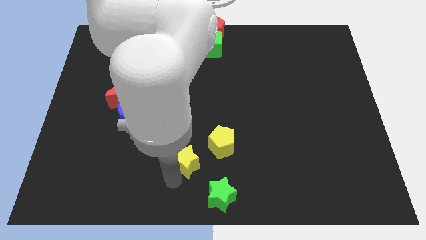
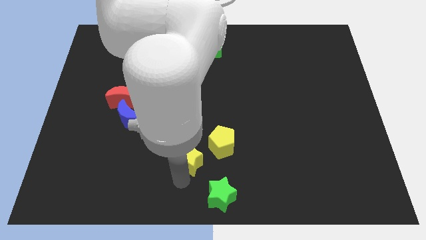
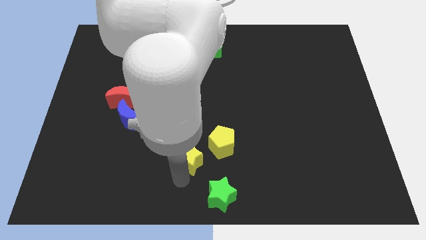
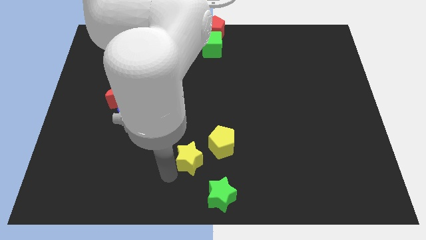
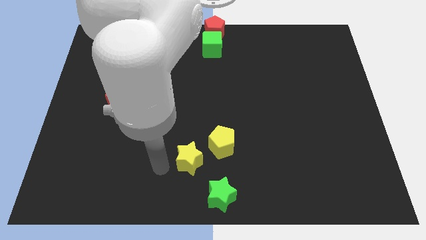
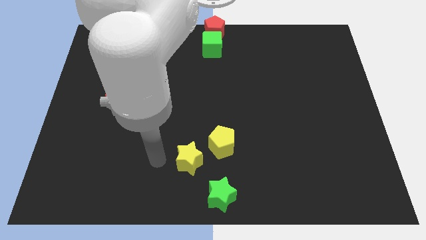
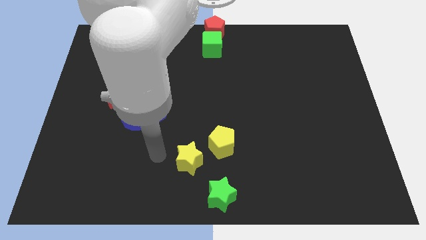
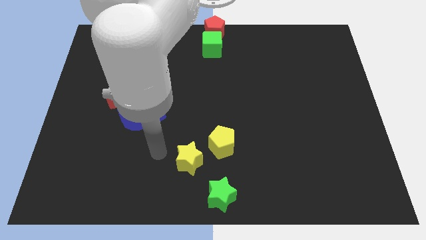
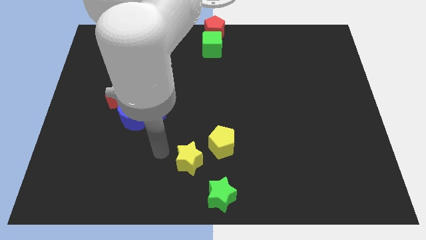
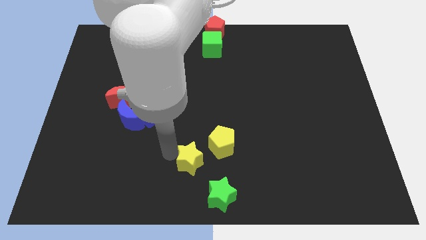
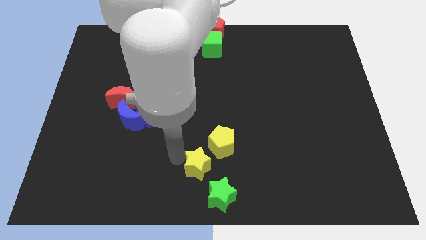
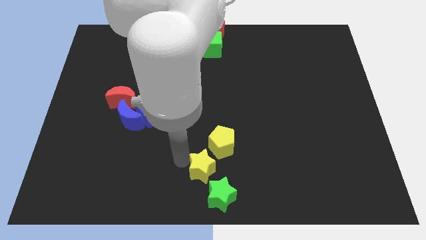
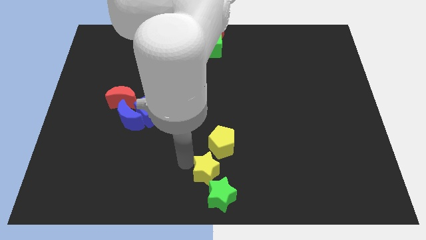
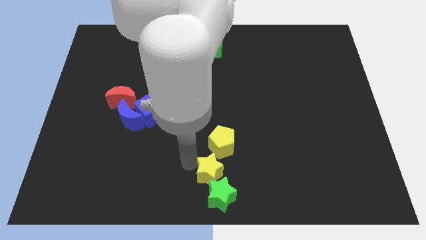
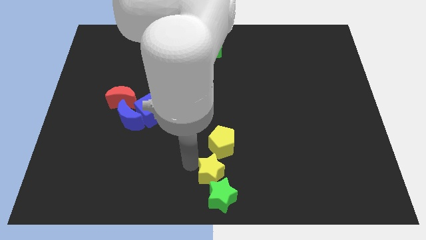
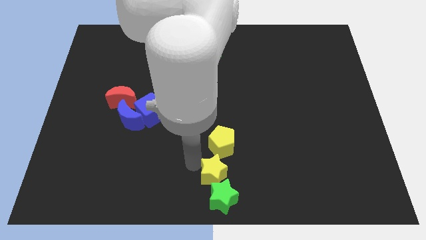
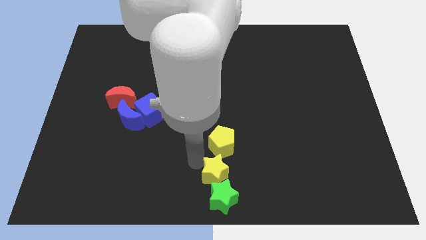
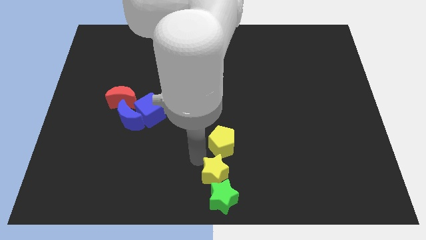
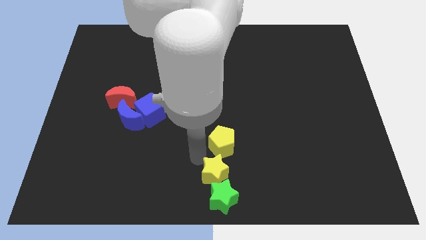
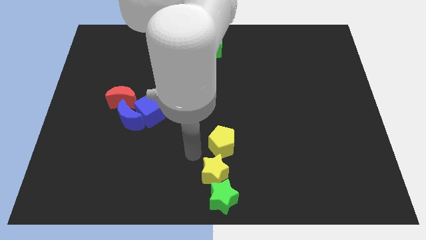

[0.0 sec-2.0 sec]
push the yellow star into the green star

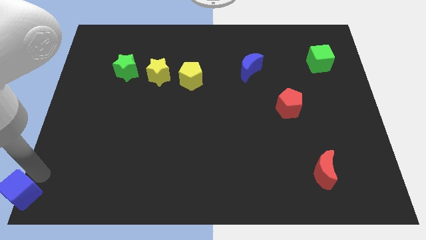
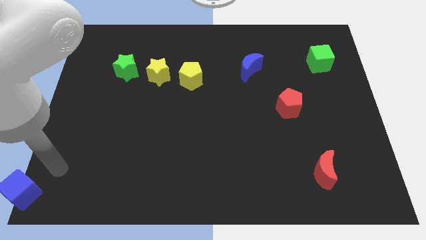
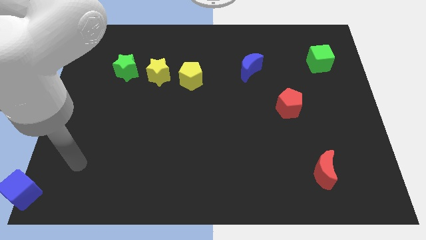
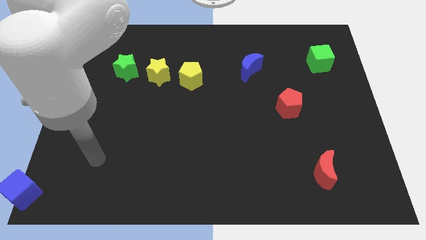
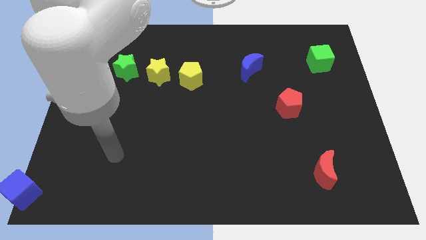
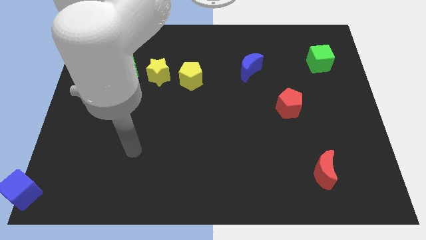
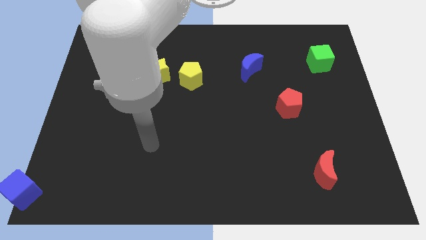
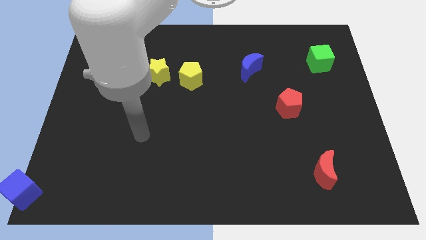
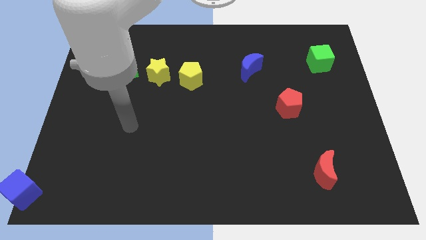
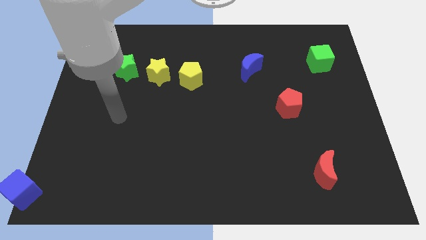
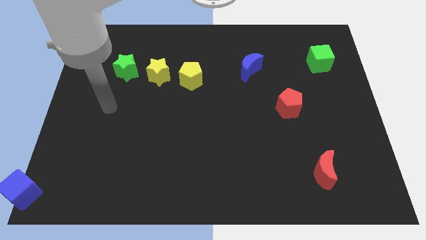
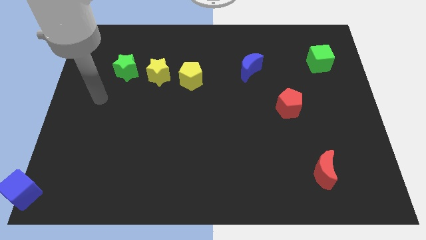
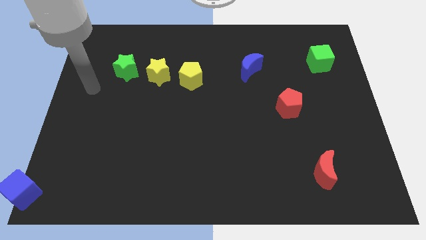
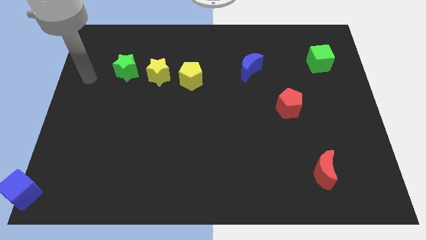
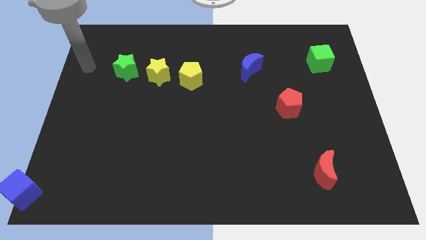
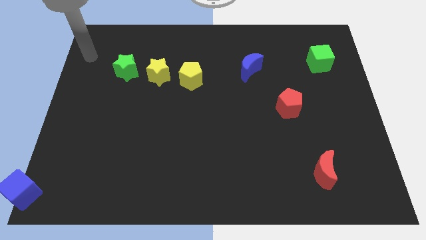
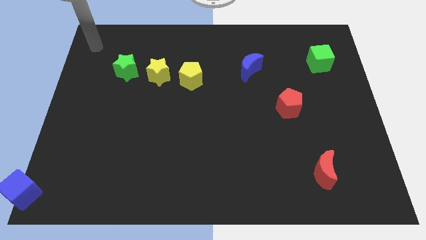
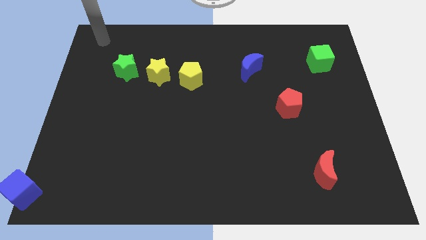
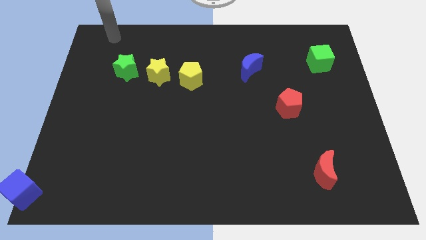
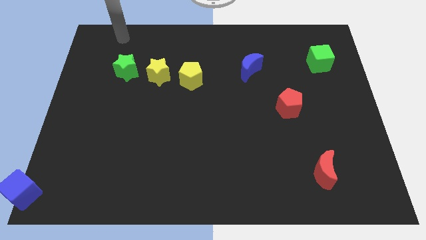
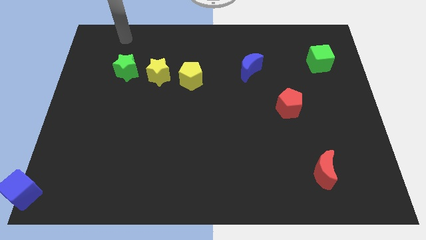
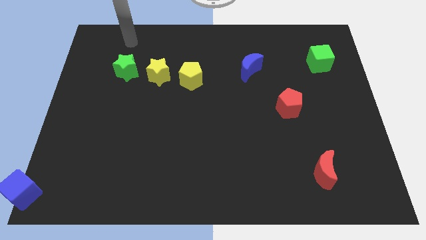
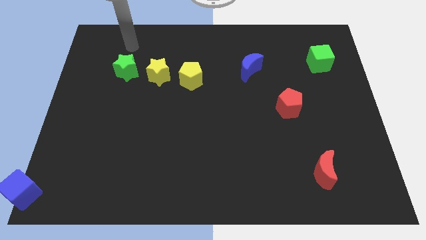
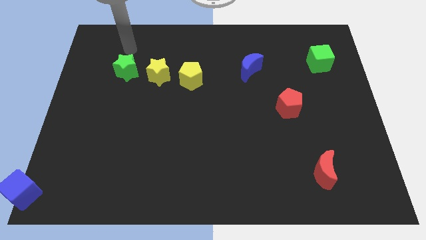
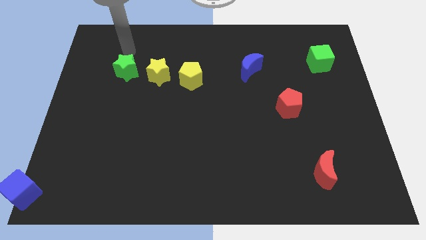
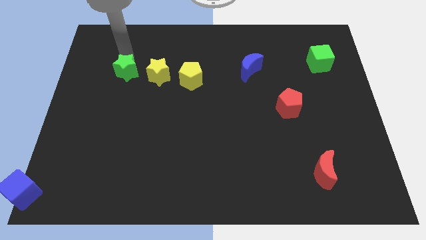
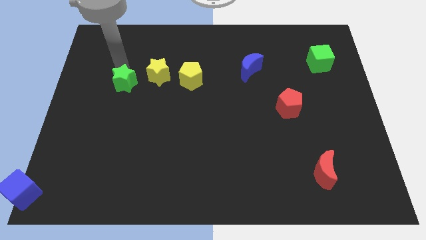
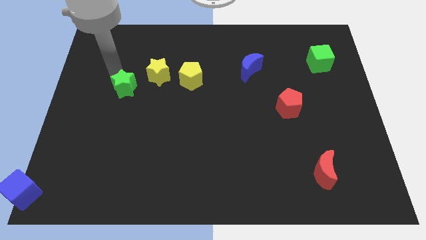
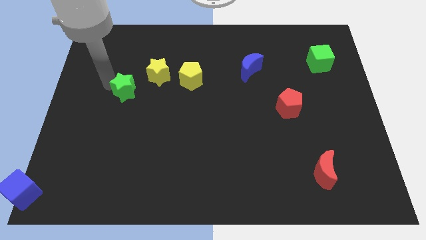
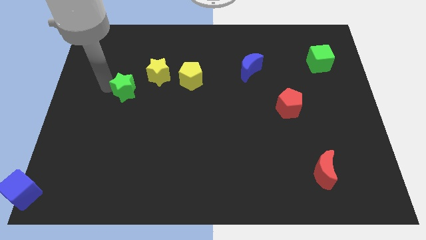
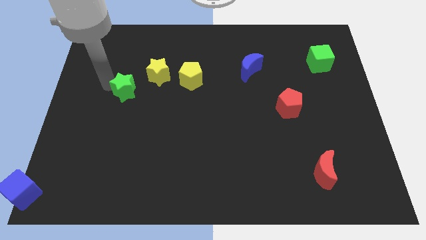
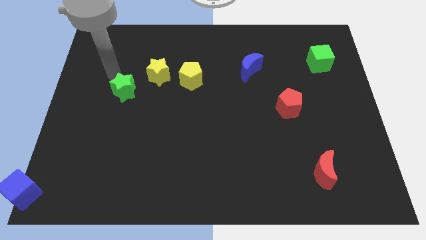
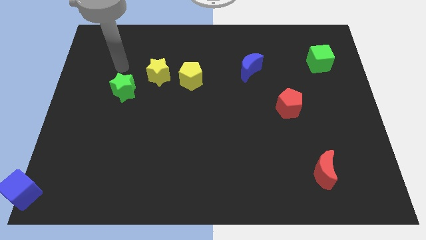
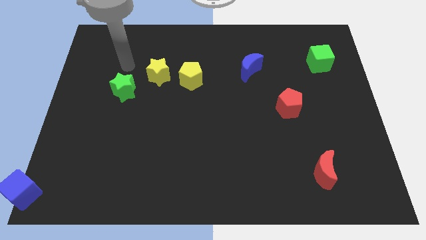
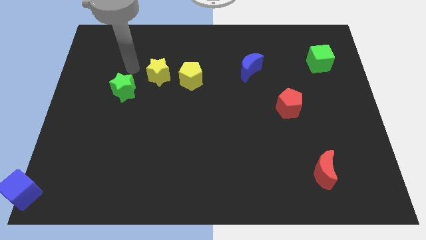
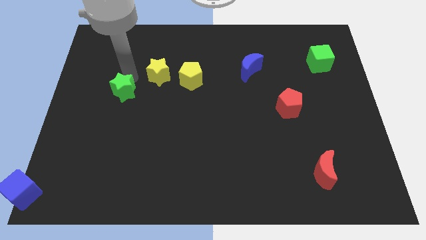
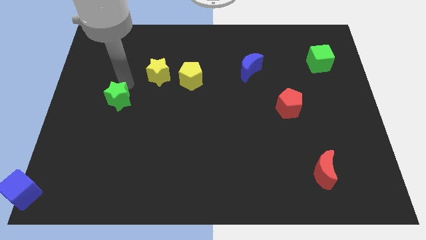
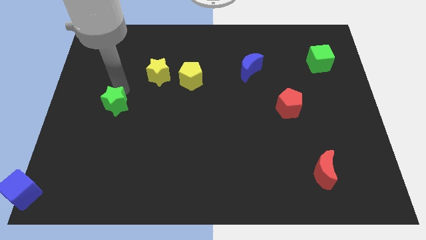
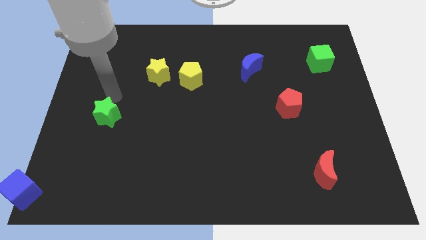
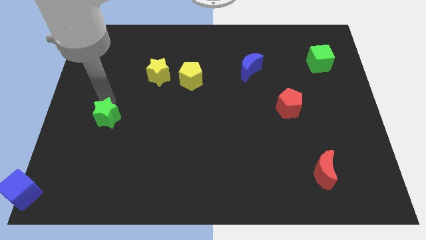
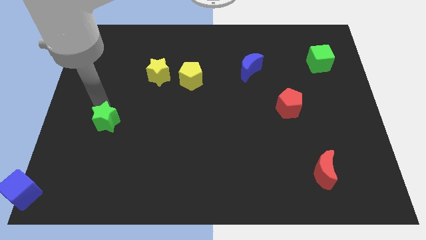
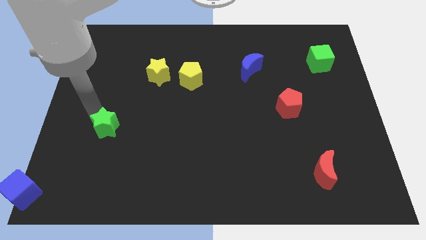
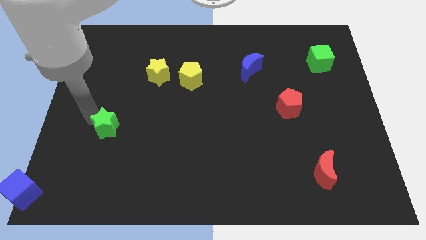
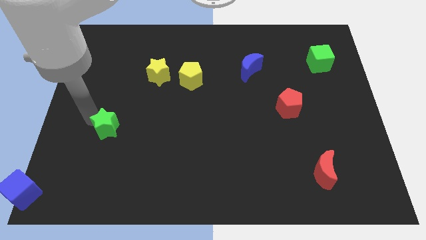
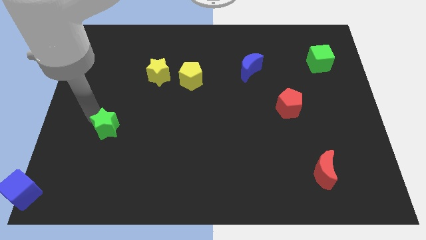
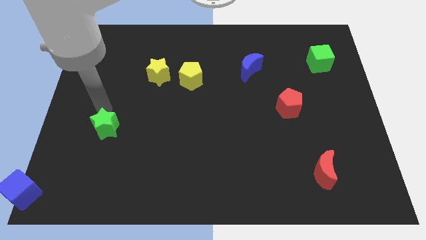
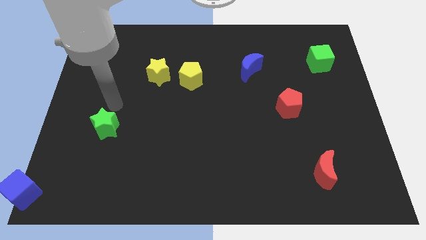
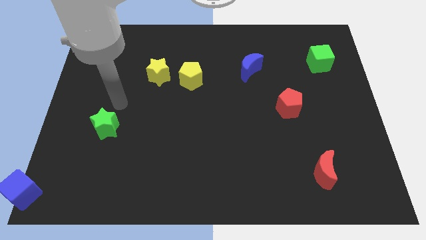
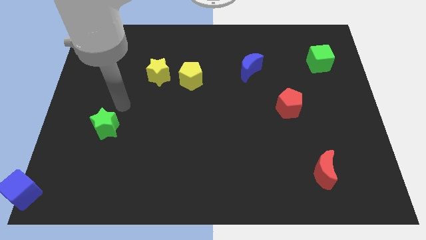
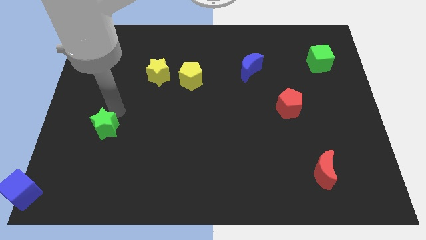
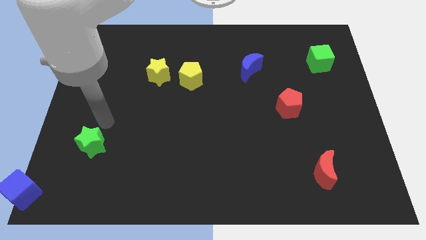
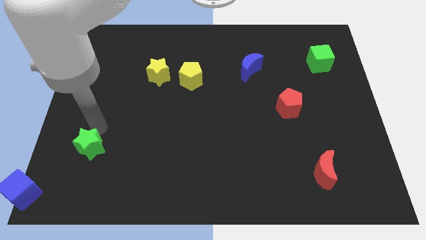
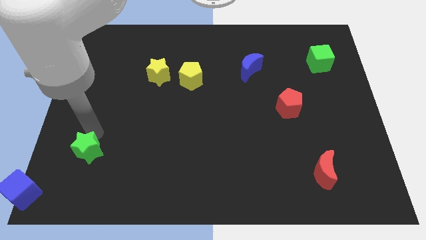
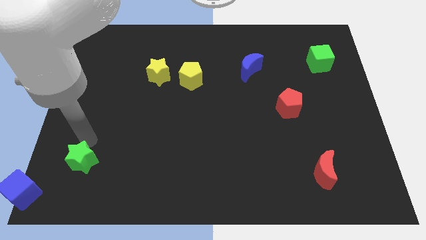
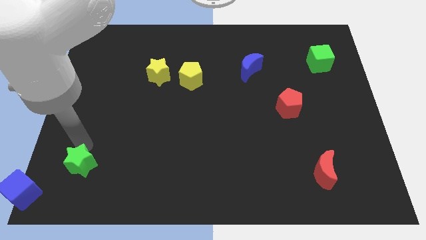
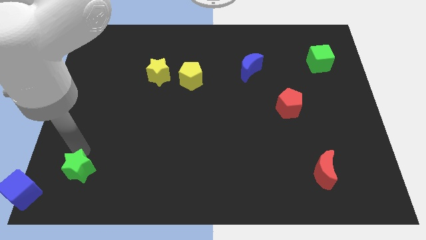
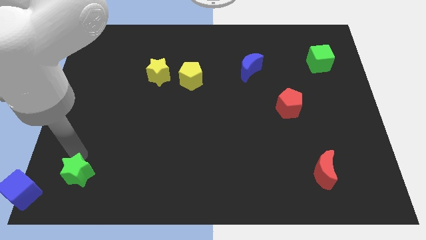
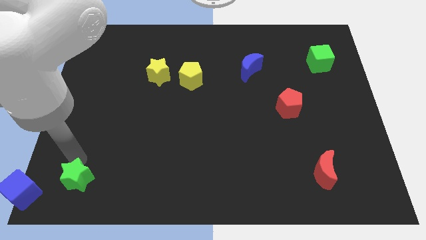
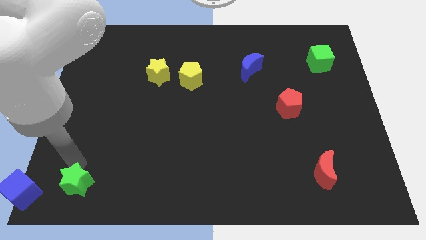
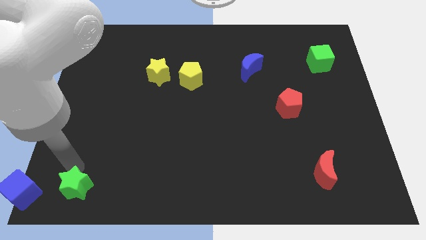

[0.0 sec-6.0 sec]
move the green star to the right side of the blue cube

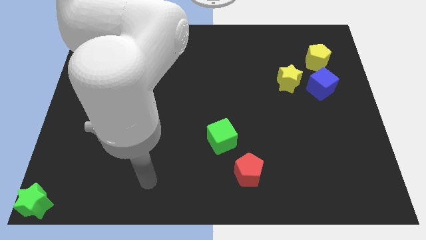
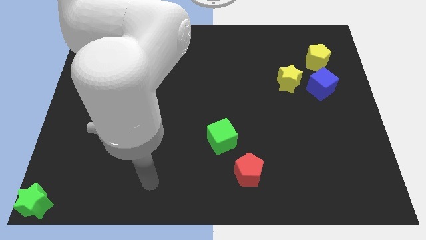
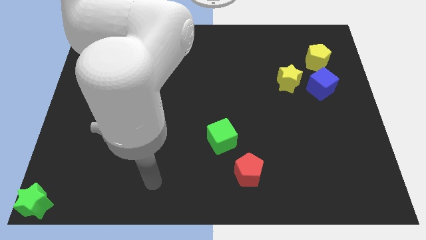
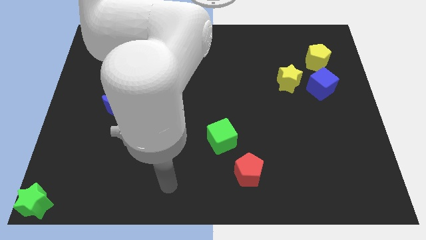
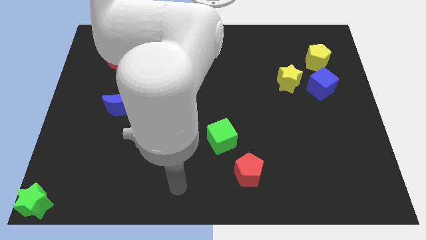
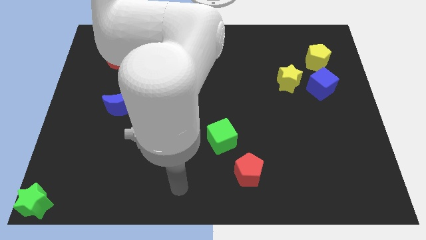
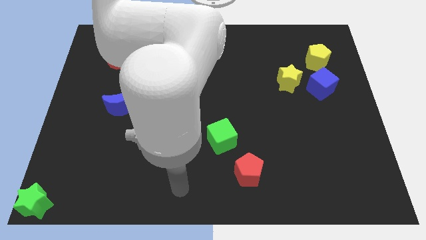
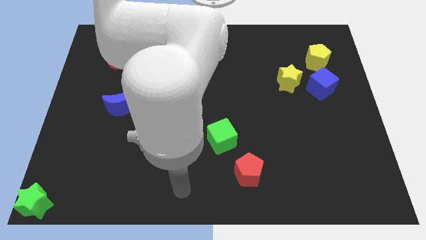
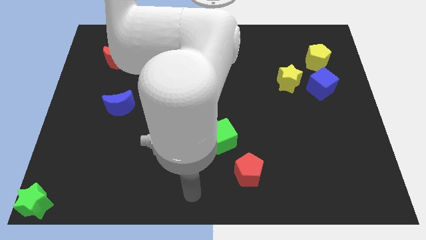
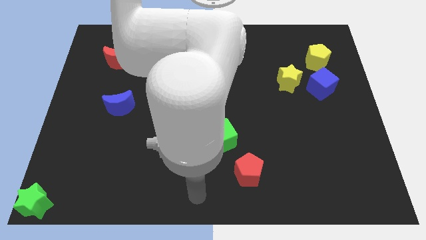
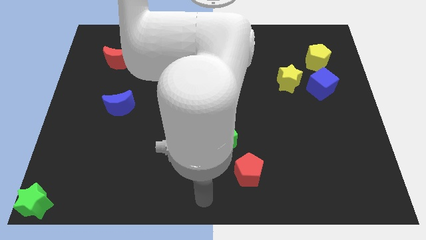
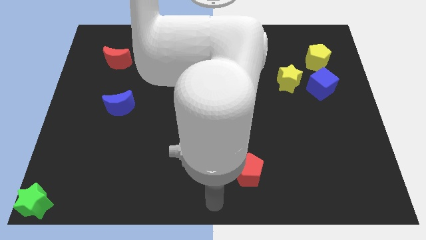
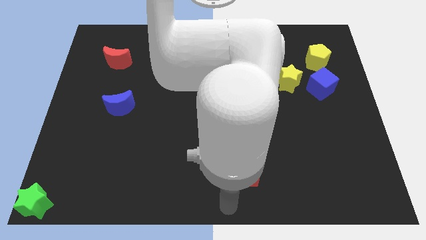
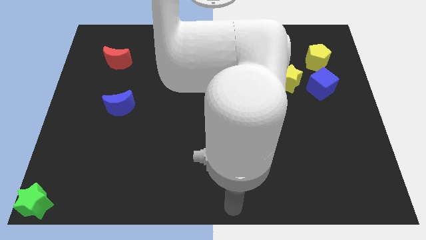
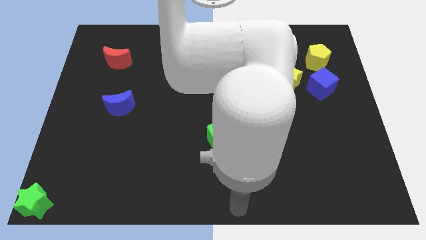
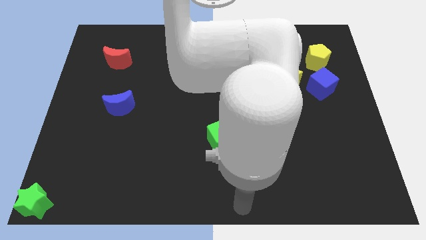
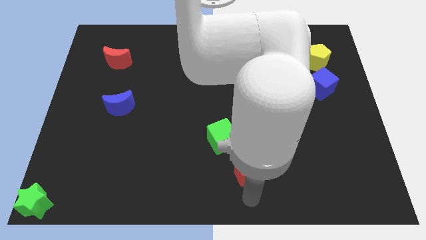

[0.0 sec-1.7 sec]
move the arm to the bottom of the red pentagon
